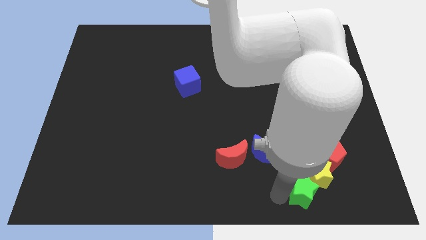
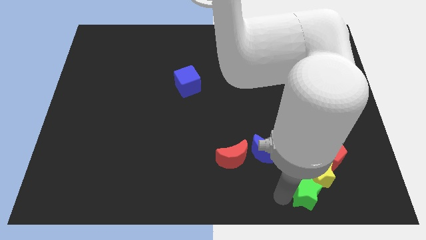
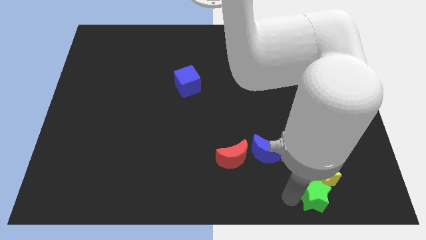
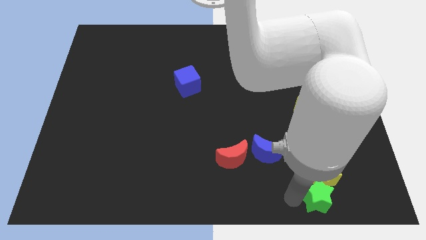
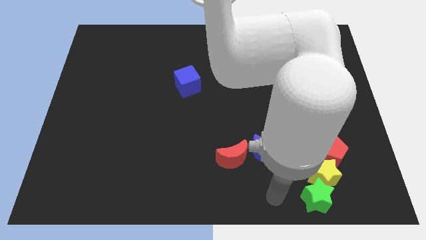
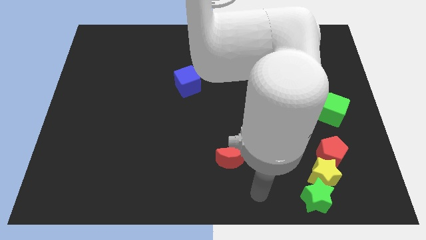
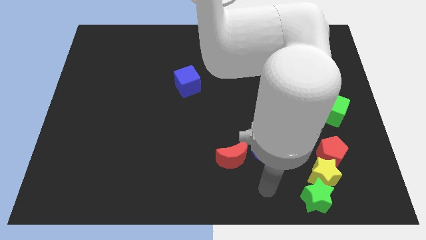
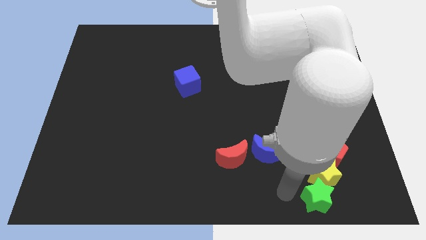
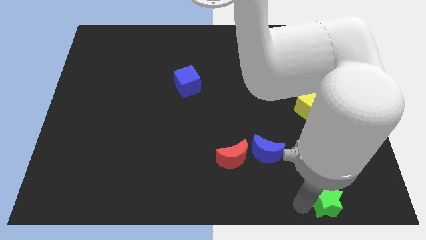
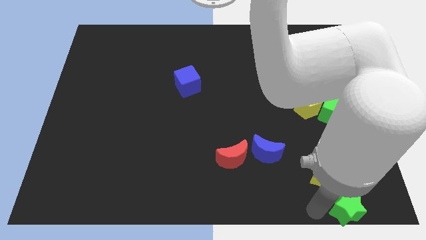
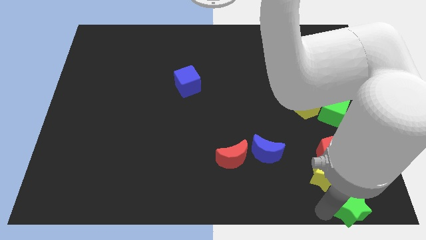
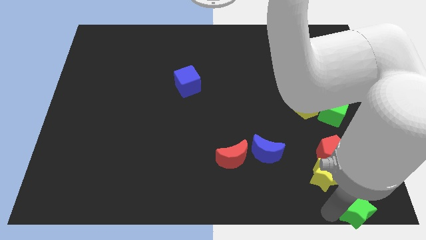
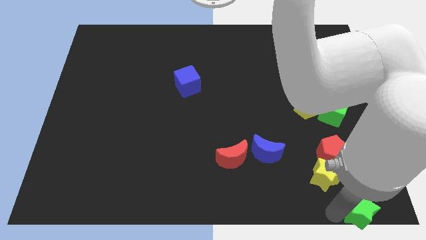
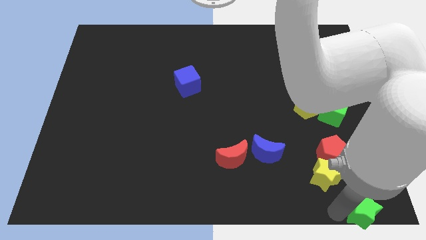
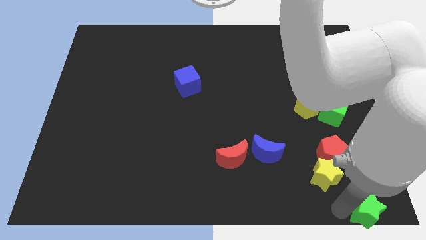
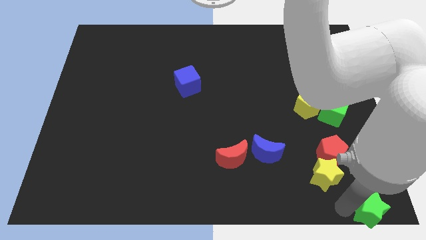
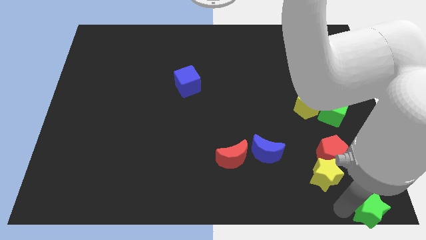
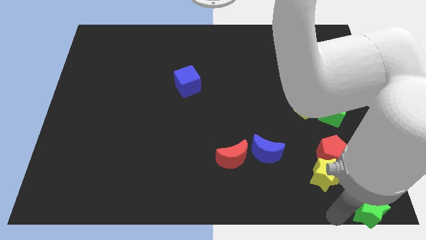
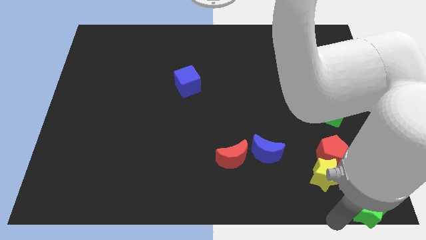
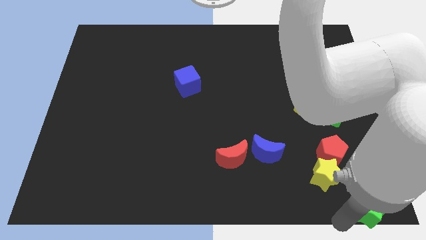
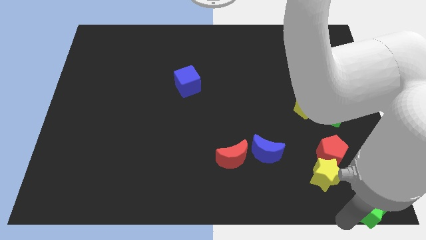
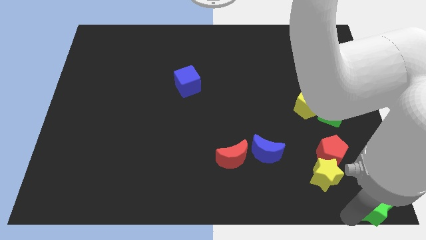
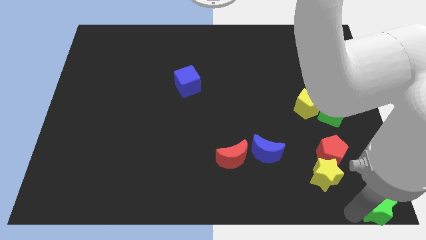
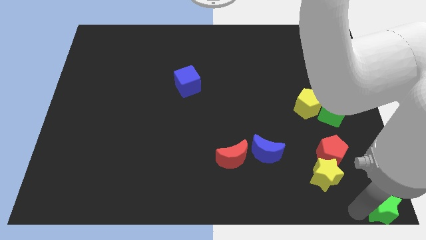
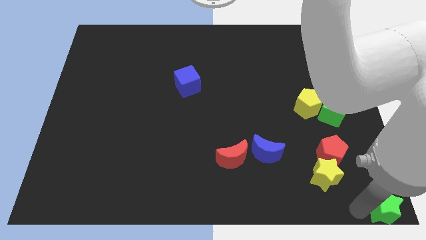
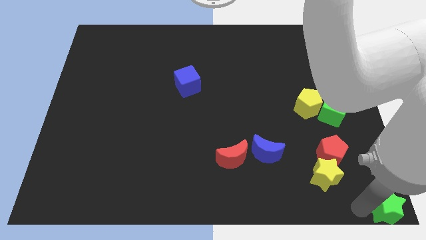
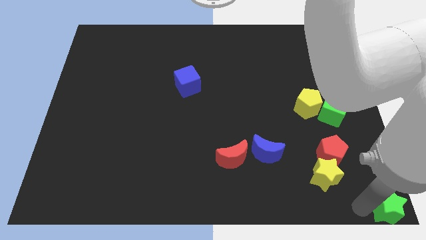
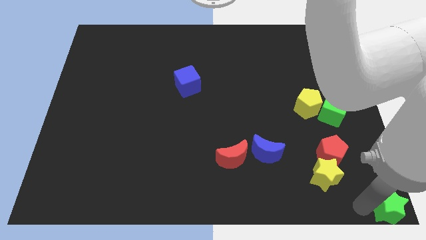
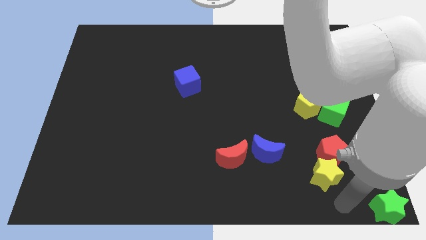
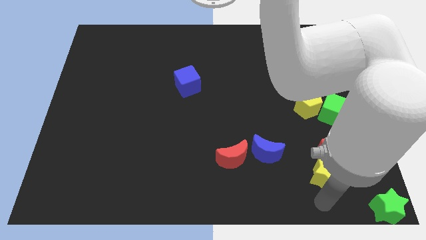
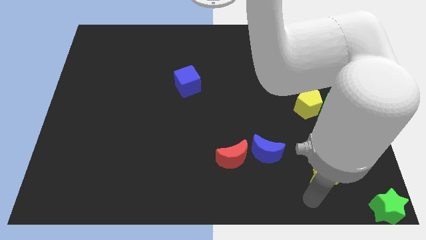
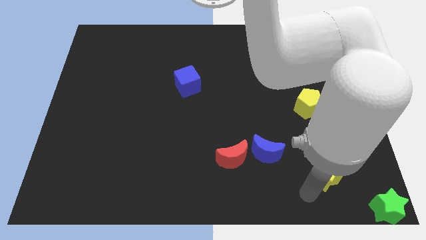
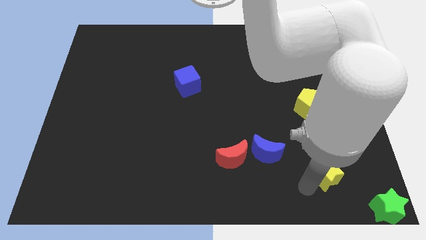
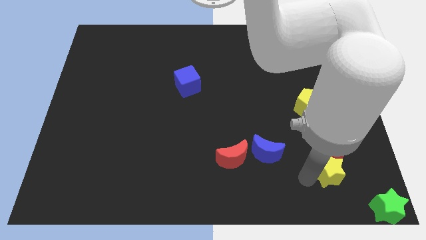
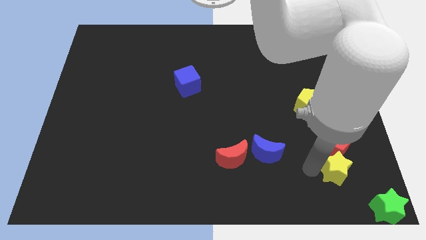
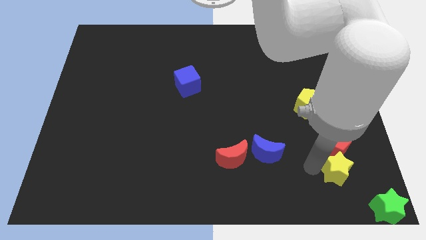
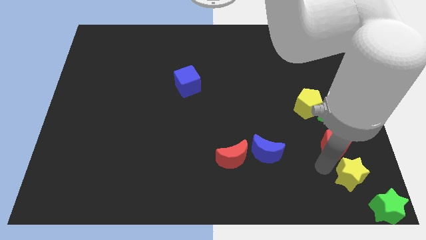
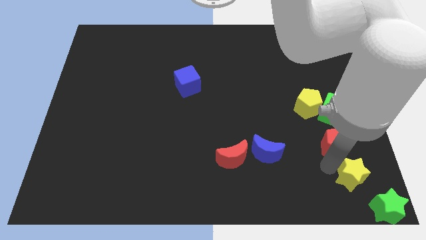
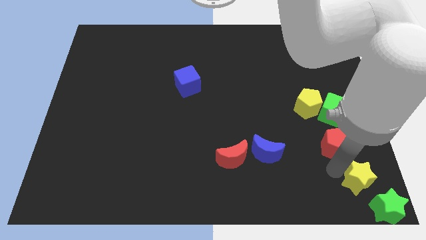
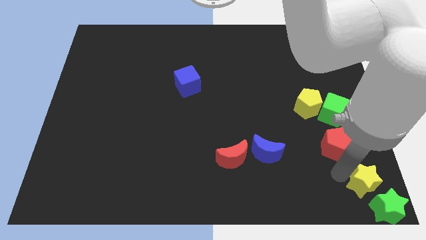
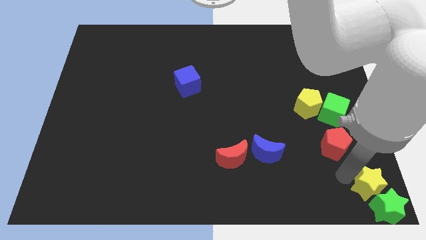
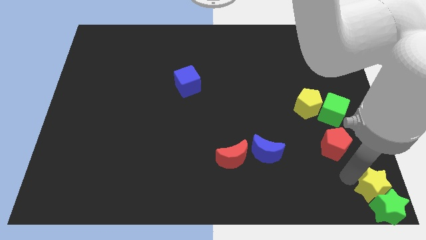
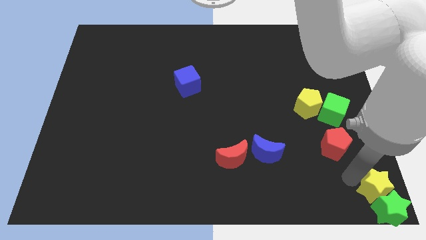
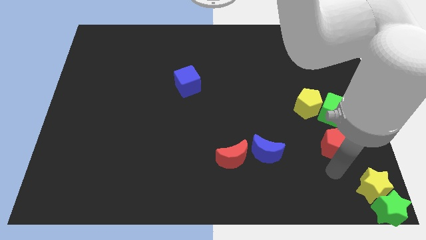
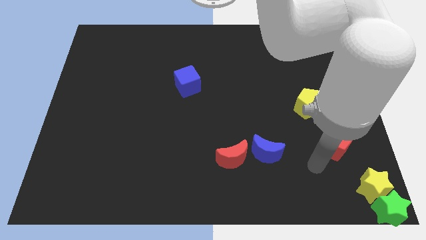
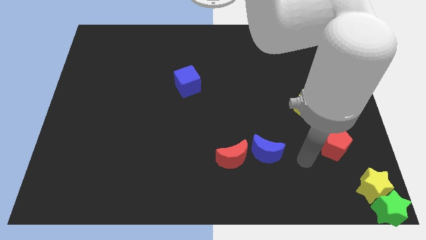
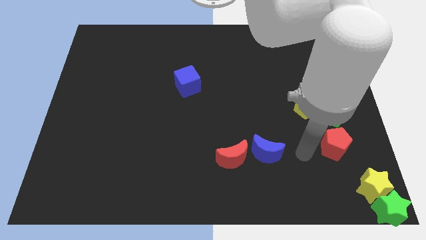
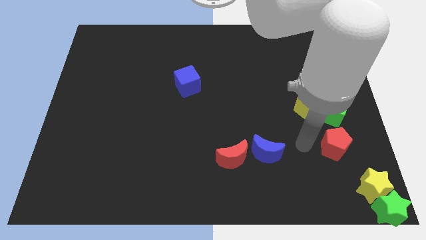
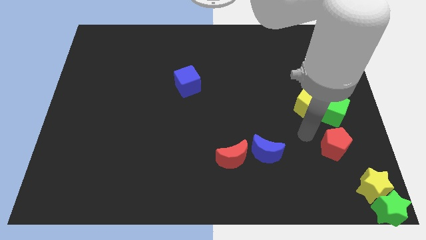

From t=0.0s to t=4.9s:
push stars to the bottom right corner of the board

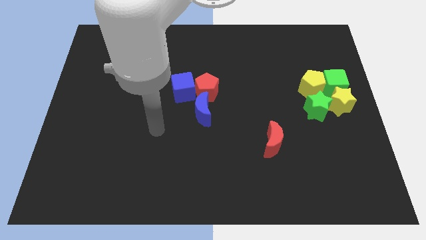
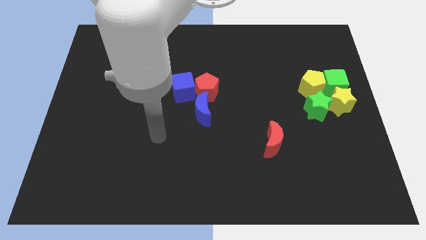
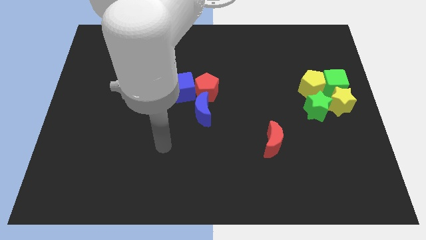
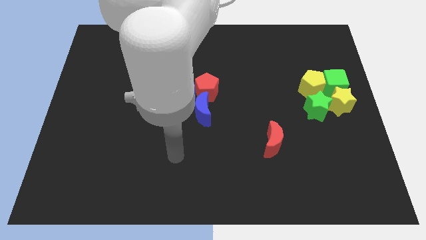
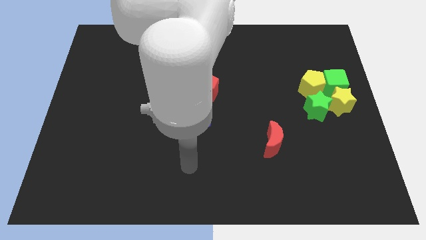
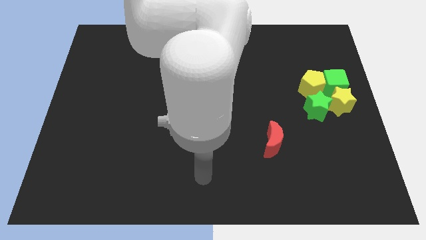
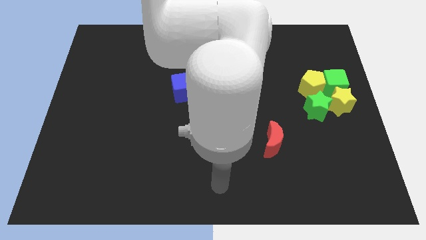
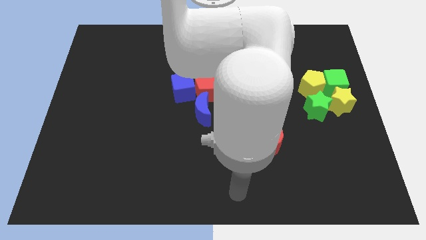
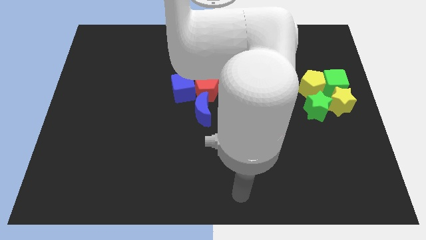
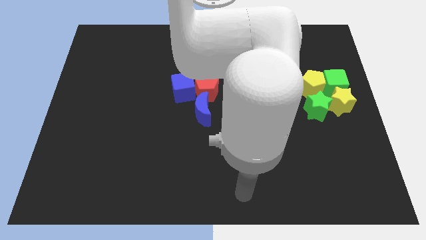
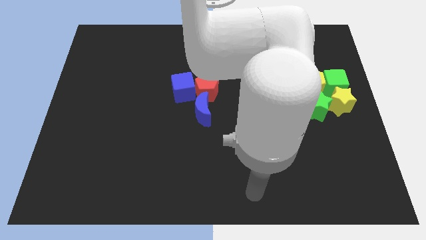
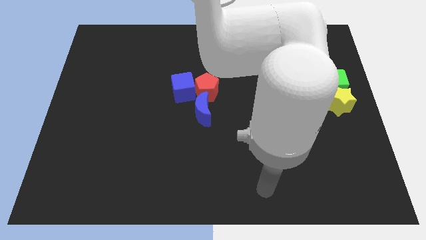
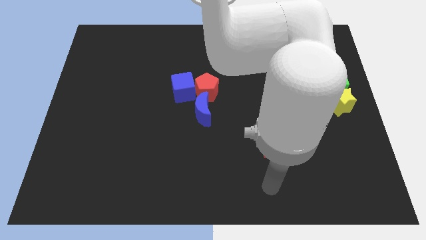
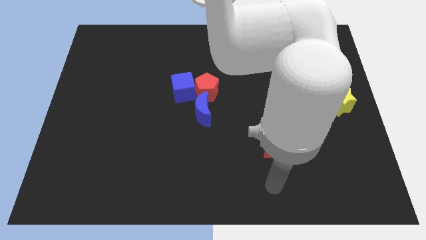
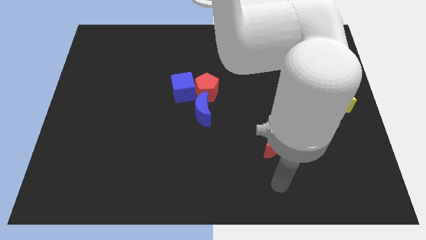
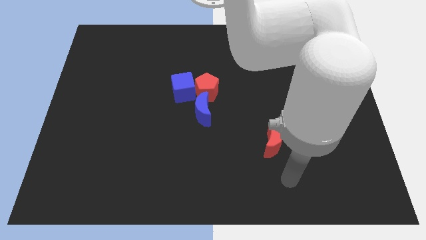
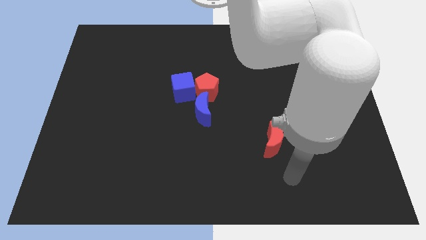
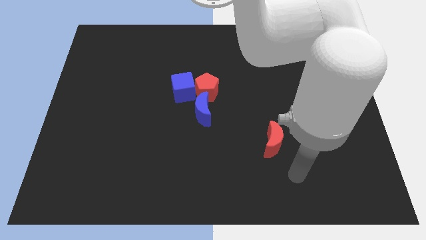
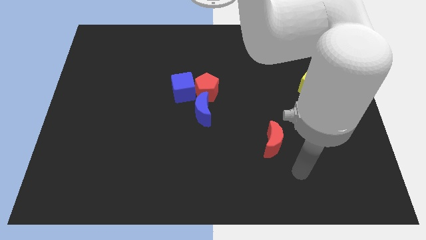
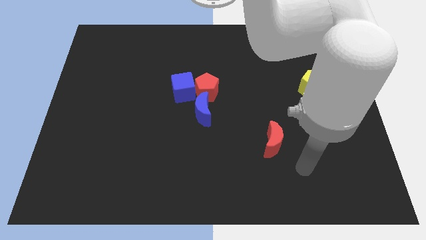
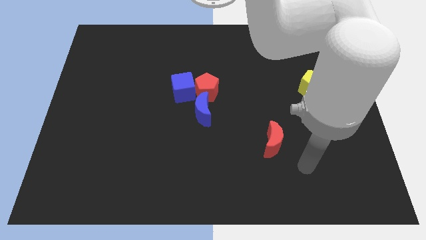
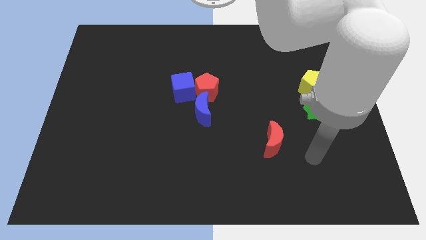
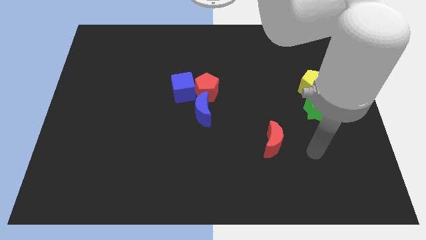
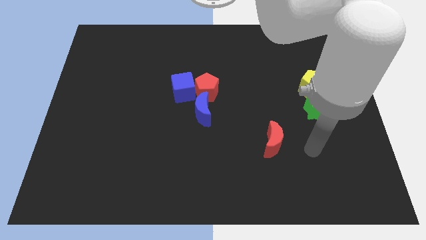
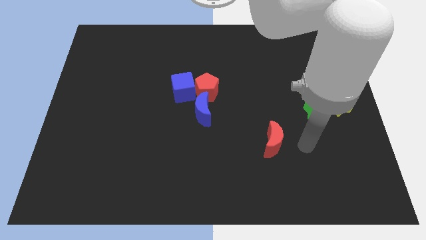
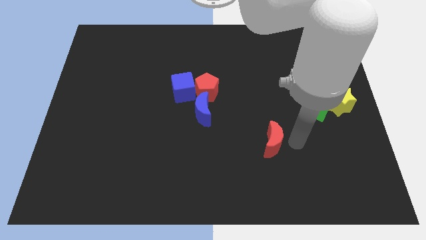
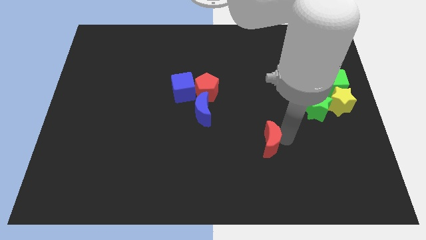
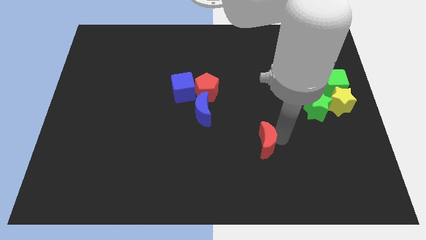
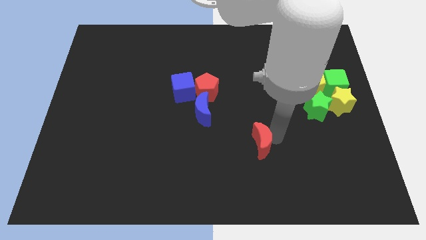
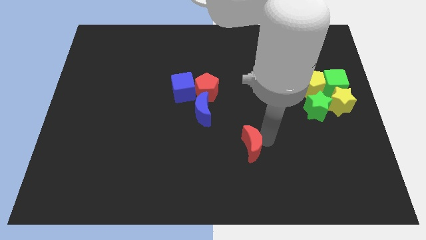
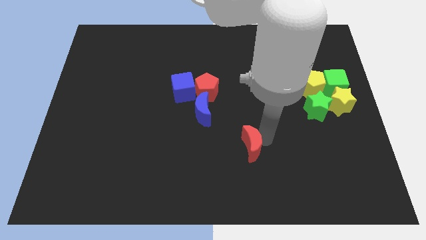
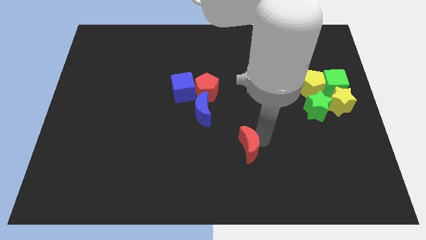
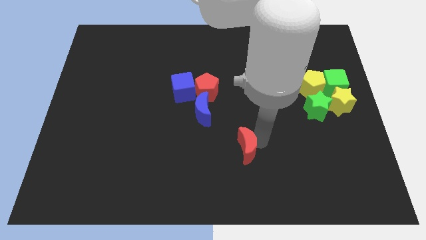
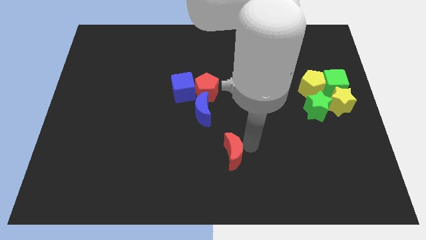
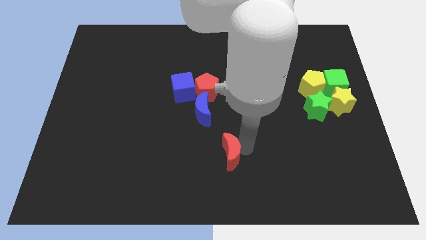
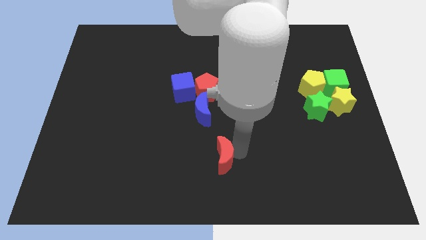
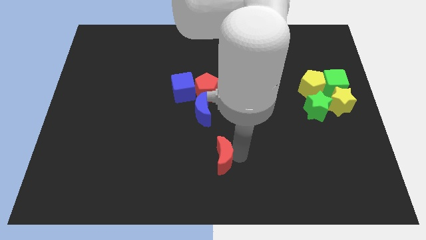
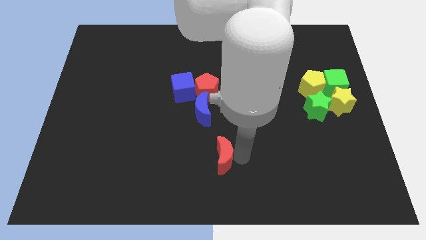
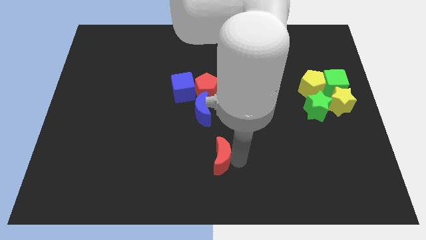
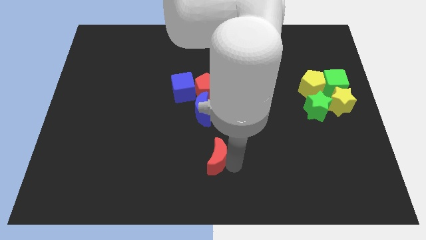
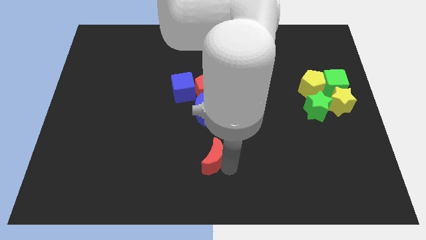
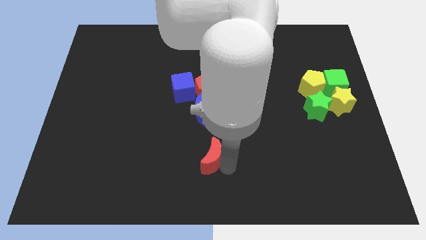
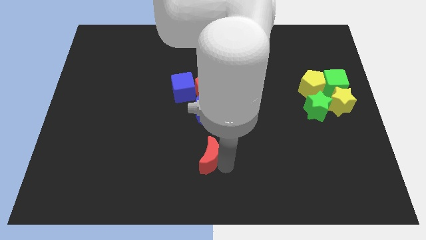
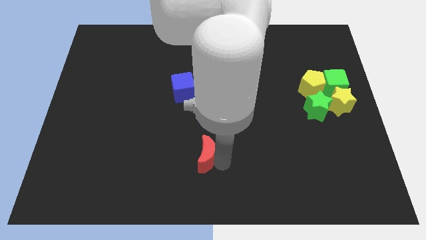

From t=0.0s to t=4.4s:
move the red crescent below the blue crescent
